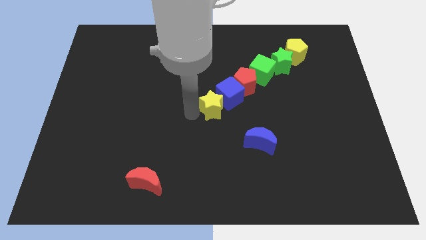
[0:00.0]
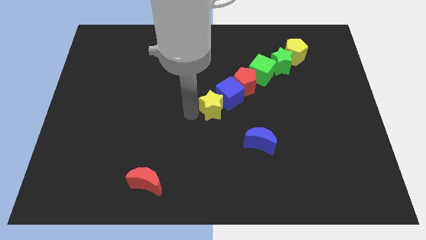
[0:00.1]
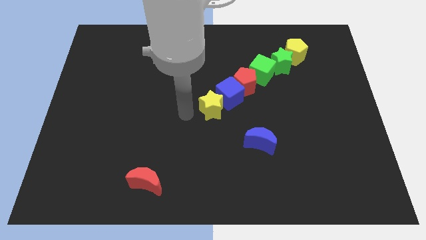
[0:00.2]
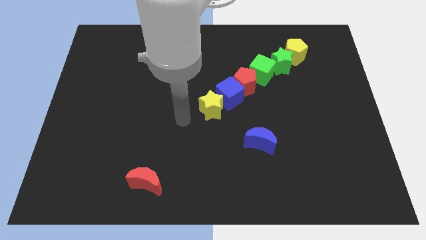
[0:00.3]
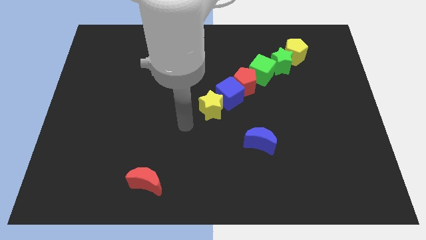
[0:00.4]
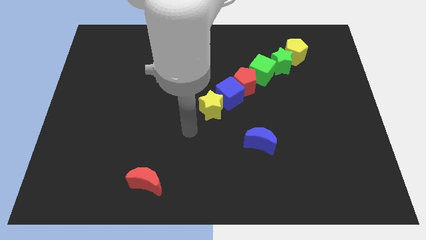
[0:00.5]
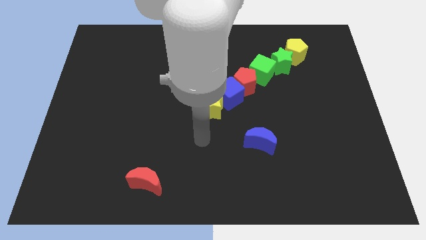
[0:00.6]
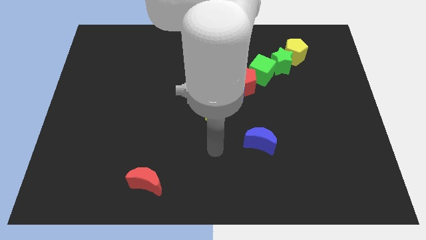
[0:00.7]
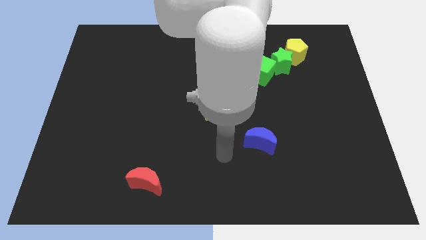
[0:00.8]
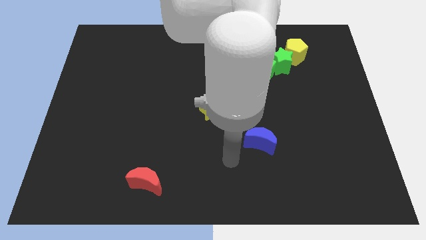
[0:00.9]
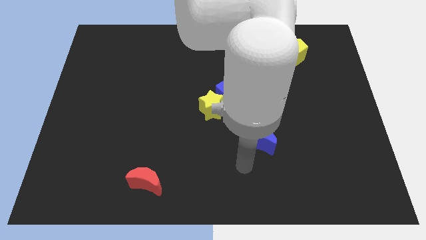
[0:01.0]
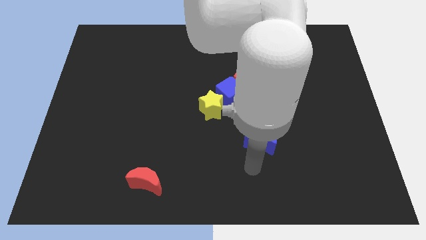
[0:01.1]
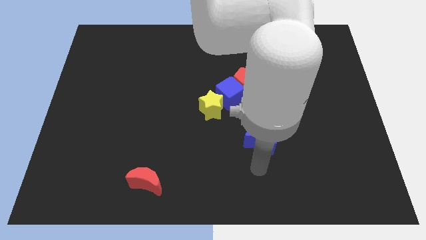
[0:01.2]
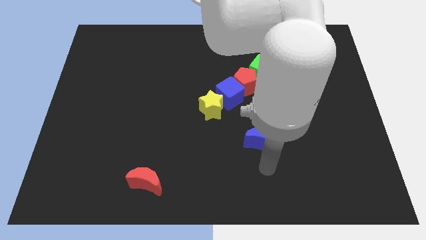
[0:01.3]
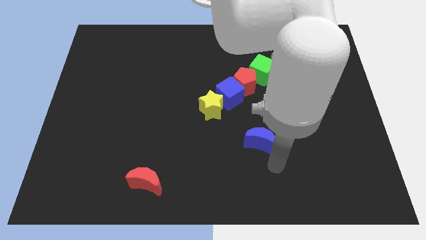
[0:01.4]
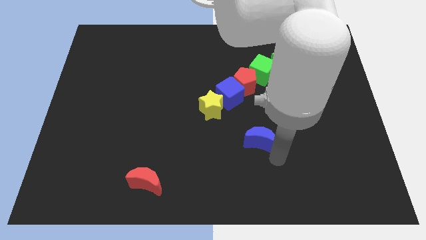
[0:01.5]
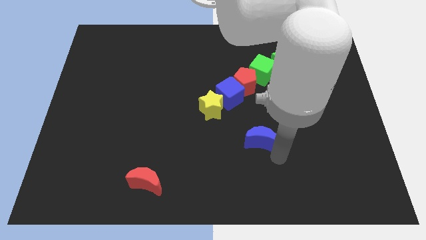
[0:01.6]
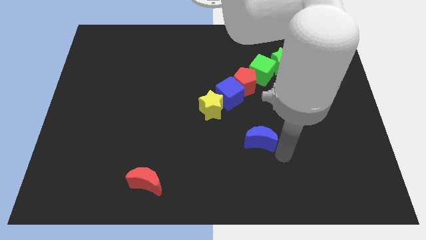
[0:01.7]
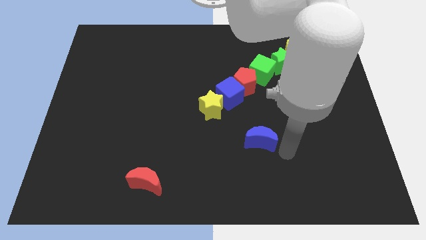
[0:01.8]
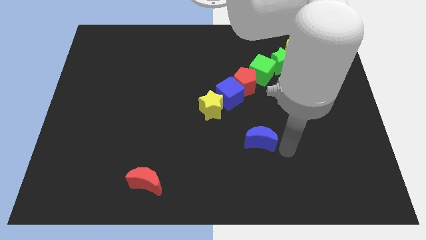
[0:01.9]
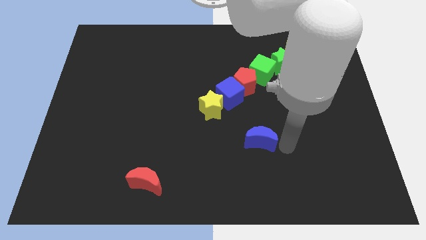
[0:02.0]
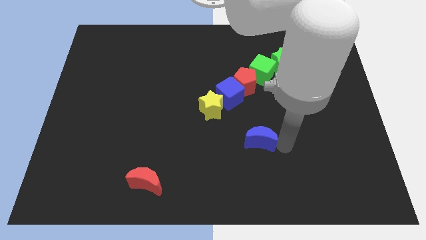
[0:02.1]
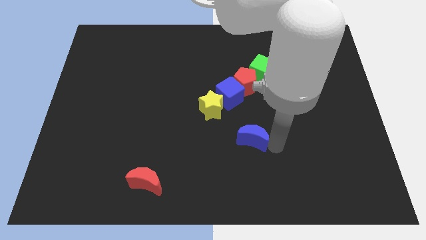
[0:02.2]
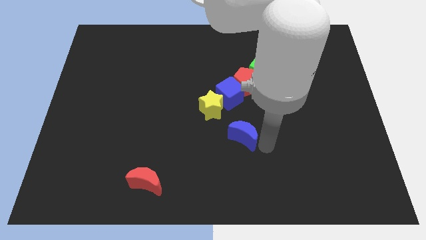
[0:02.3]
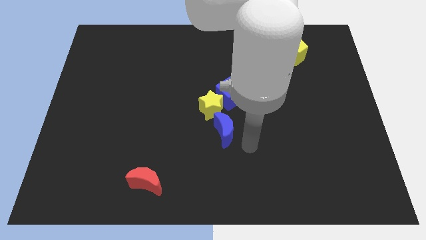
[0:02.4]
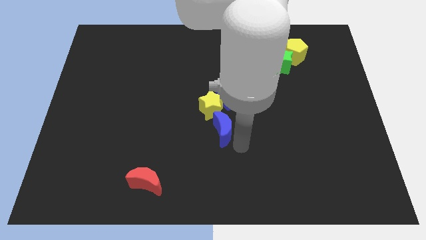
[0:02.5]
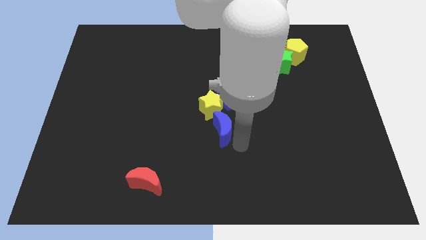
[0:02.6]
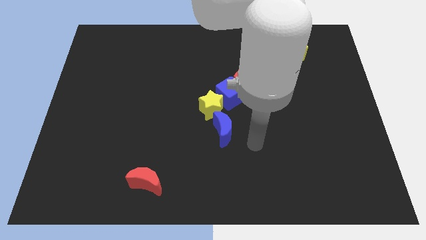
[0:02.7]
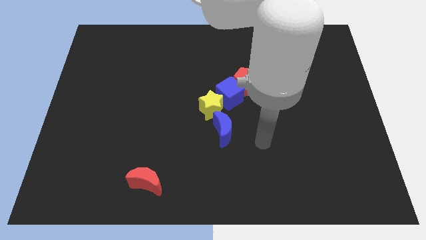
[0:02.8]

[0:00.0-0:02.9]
push the blue moon closer to the yellow star

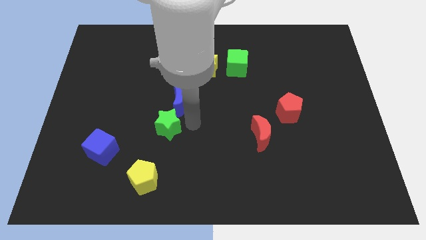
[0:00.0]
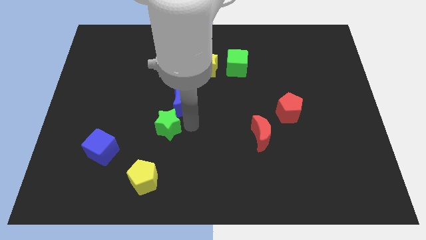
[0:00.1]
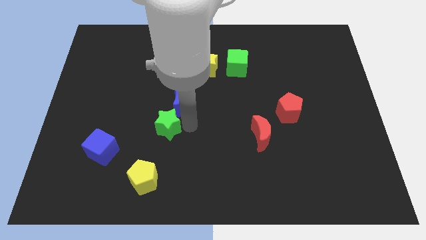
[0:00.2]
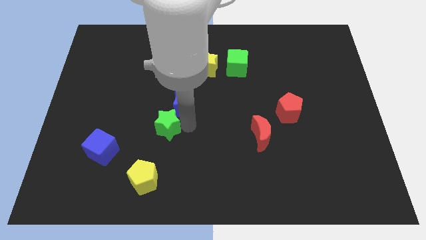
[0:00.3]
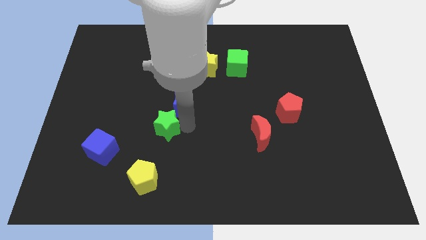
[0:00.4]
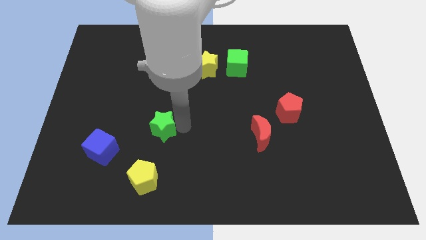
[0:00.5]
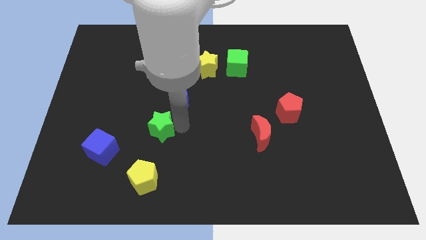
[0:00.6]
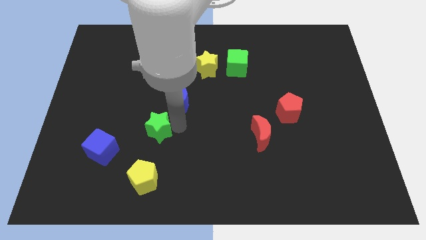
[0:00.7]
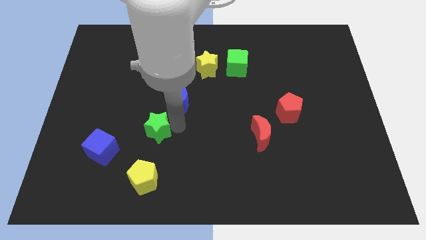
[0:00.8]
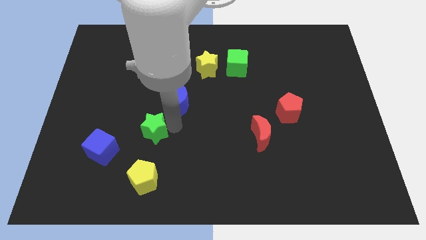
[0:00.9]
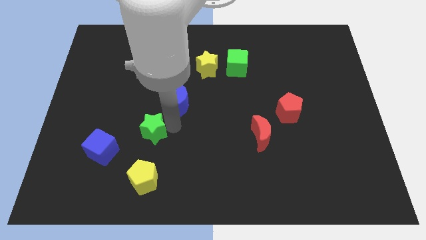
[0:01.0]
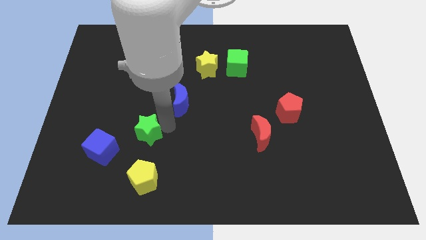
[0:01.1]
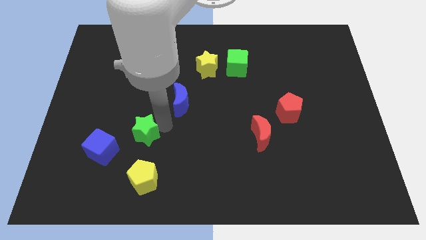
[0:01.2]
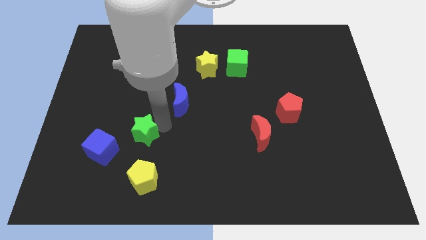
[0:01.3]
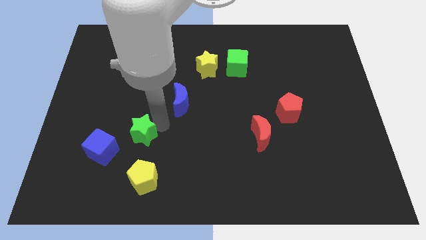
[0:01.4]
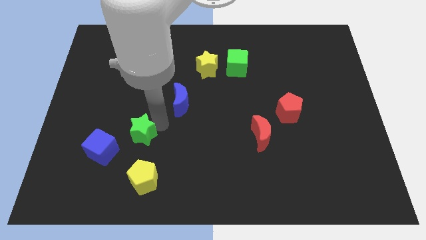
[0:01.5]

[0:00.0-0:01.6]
separate the green star from the blue moon

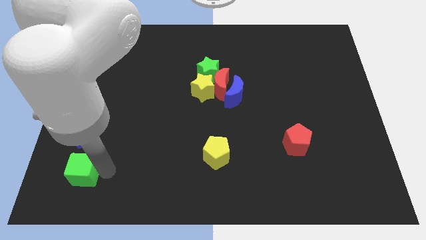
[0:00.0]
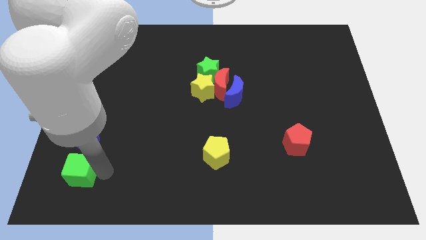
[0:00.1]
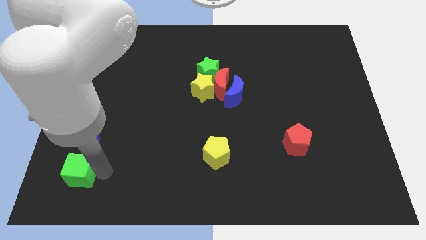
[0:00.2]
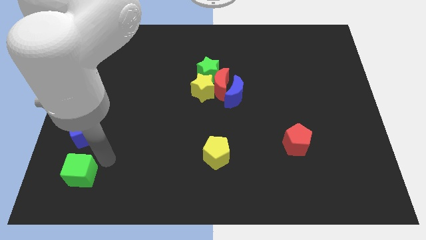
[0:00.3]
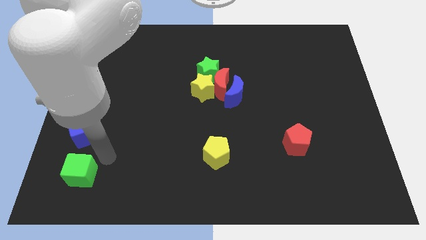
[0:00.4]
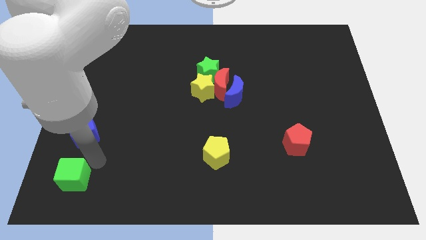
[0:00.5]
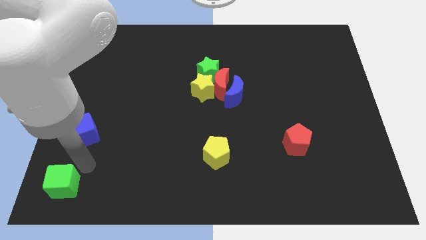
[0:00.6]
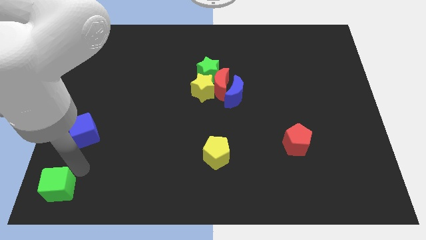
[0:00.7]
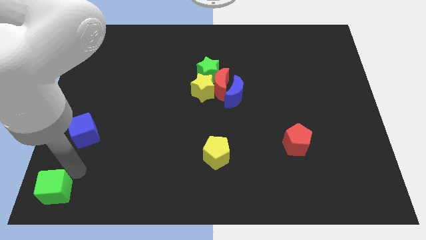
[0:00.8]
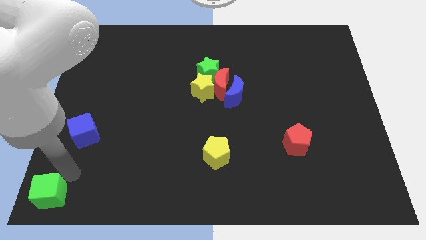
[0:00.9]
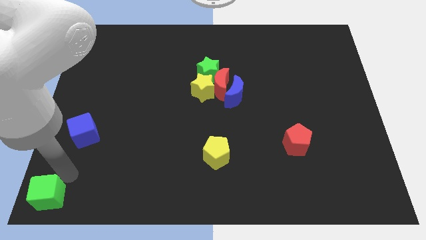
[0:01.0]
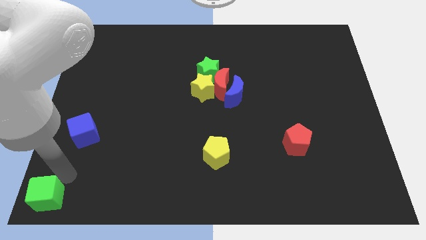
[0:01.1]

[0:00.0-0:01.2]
push green cube to the bottom left corner of the board

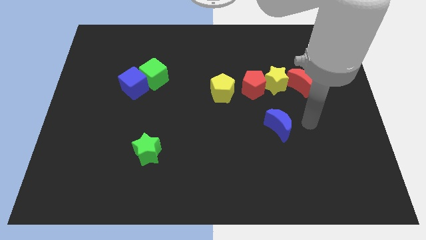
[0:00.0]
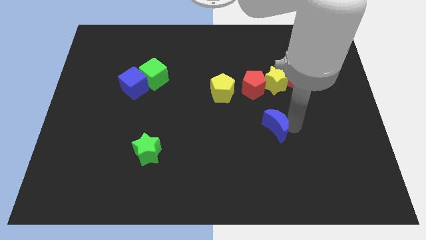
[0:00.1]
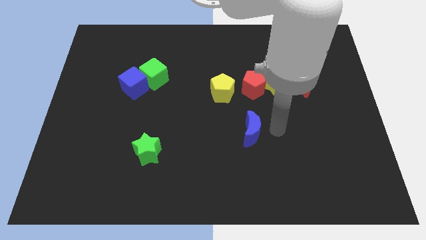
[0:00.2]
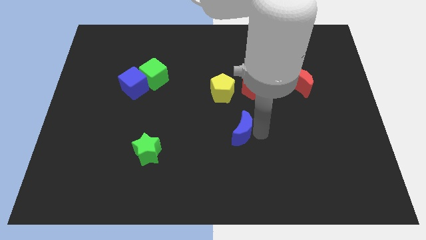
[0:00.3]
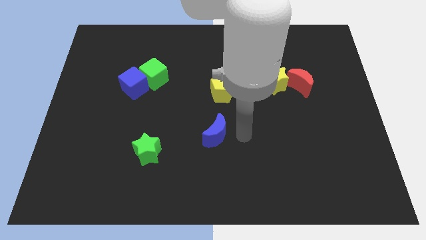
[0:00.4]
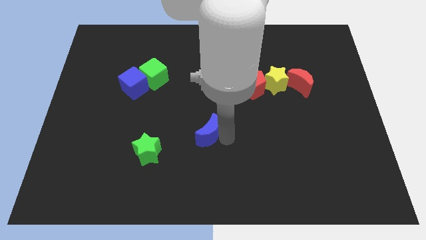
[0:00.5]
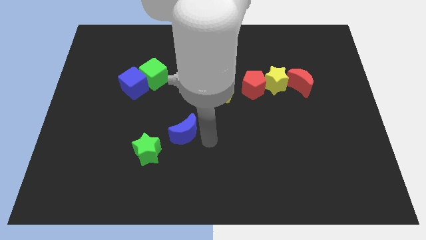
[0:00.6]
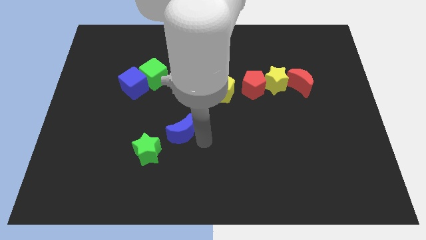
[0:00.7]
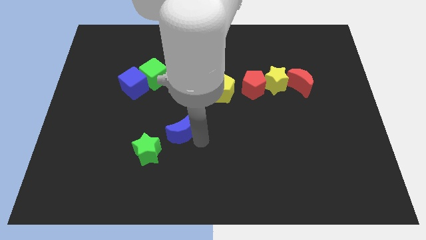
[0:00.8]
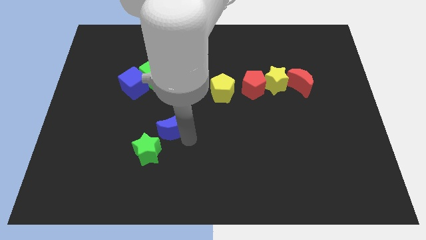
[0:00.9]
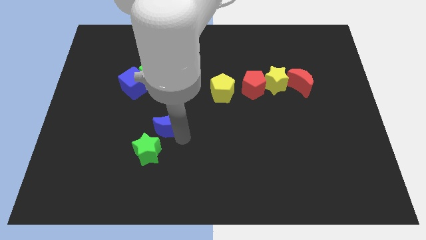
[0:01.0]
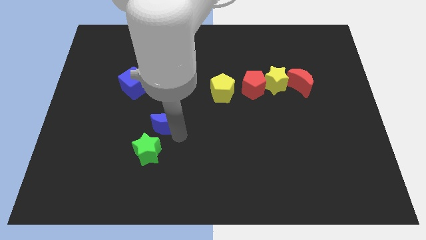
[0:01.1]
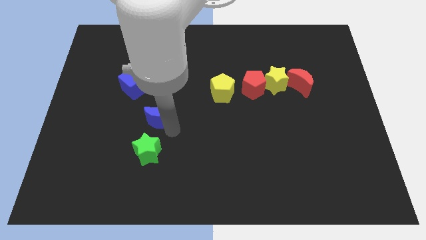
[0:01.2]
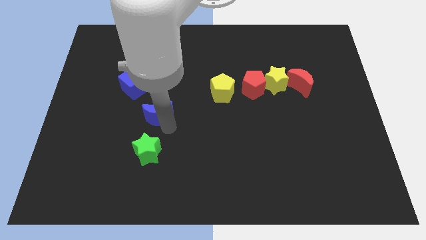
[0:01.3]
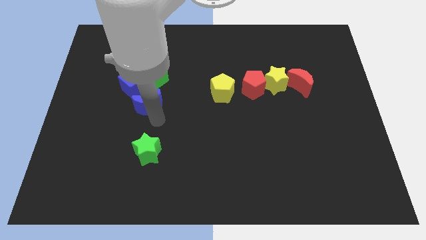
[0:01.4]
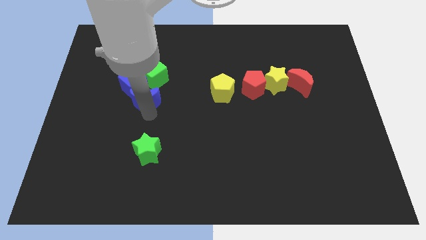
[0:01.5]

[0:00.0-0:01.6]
slide the blue crescent close to the blue cube

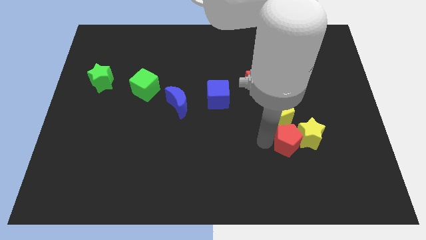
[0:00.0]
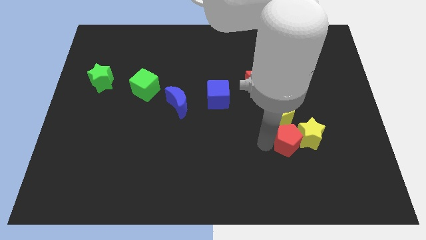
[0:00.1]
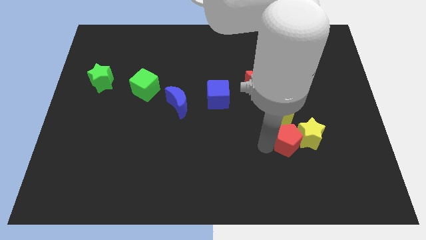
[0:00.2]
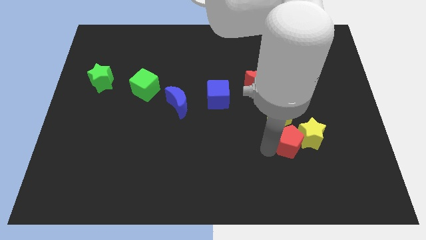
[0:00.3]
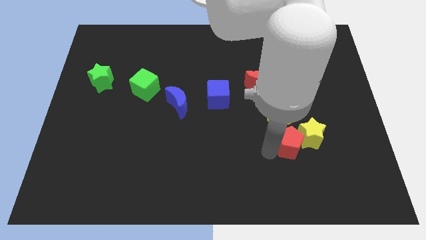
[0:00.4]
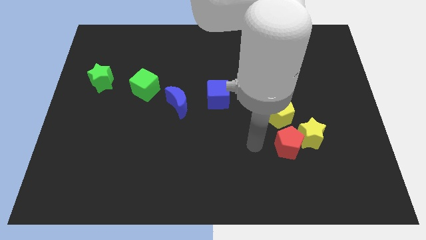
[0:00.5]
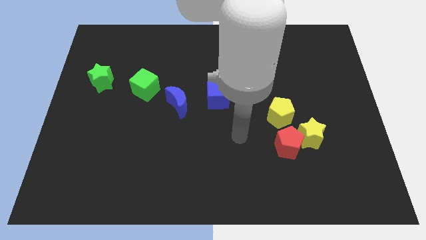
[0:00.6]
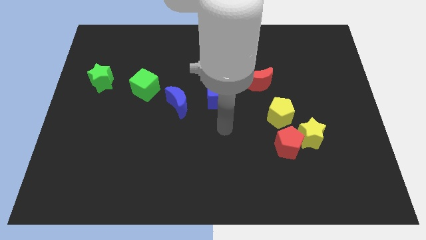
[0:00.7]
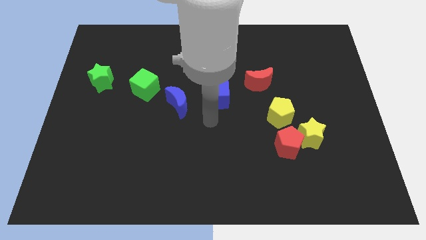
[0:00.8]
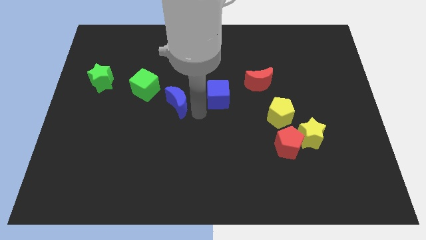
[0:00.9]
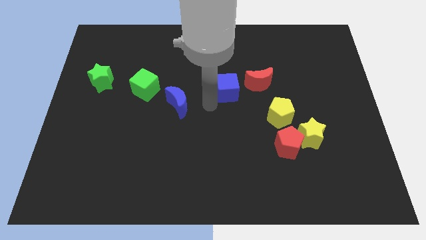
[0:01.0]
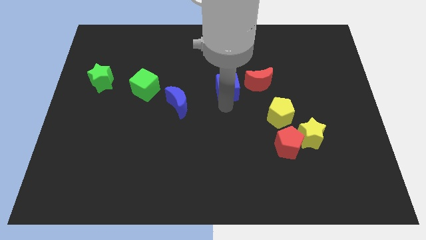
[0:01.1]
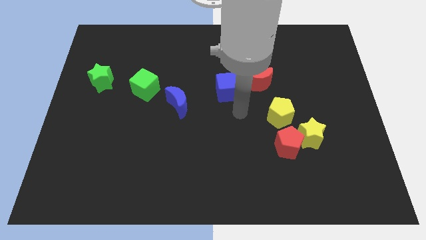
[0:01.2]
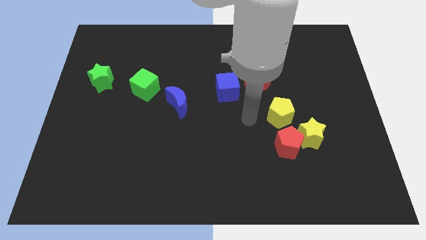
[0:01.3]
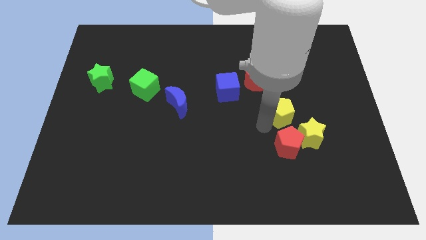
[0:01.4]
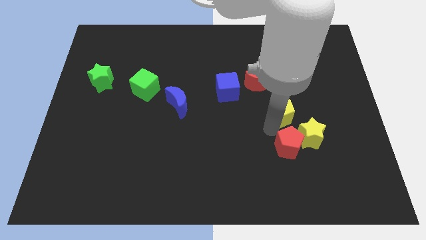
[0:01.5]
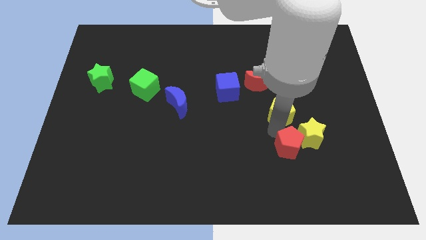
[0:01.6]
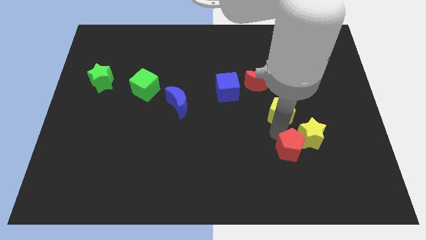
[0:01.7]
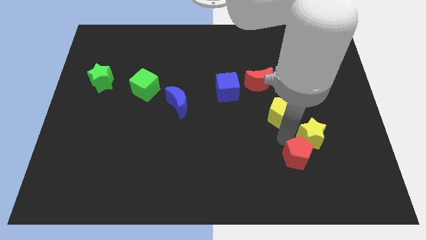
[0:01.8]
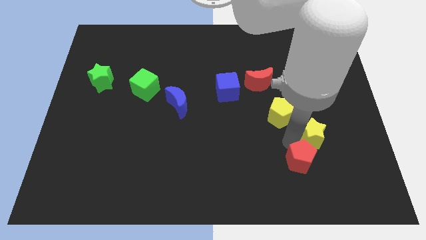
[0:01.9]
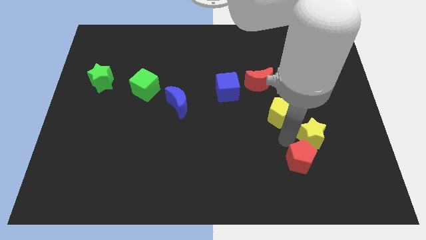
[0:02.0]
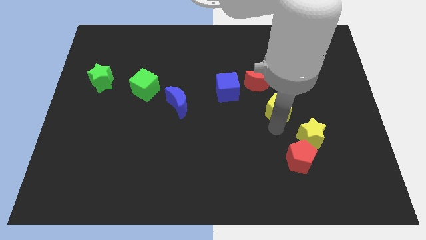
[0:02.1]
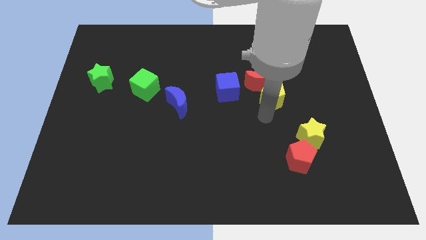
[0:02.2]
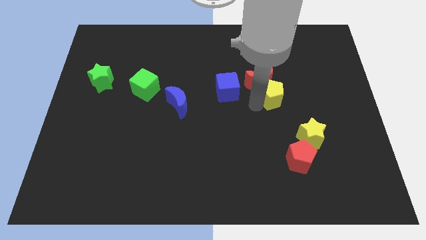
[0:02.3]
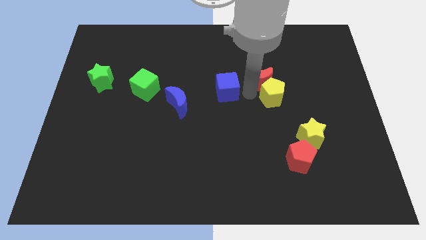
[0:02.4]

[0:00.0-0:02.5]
push yellow pentagon towards red crescent
